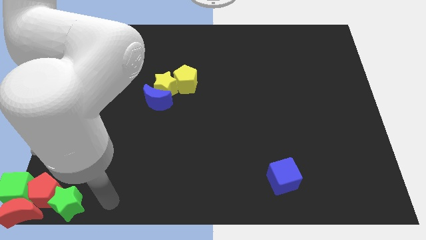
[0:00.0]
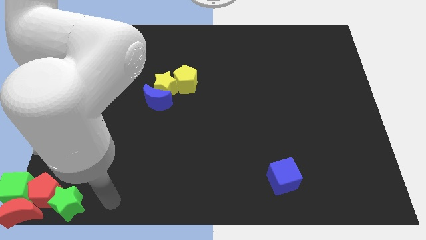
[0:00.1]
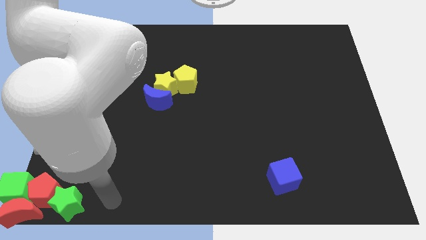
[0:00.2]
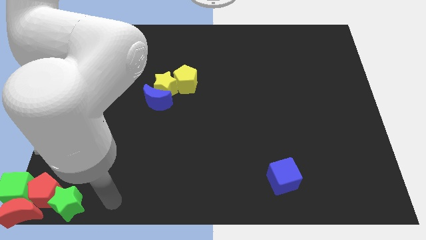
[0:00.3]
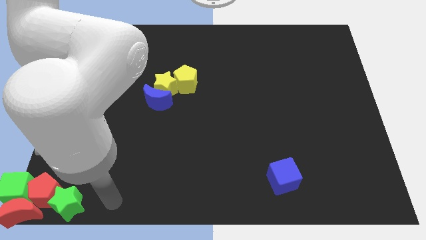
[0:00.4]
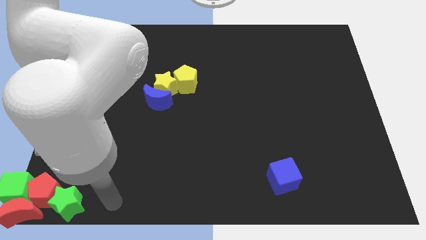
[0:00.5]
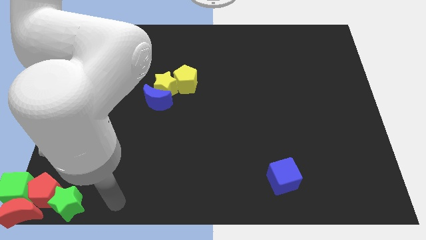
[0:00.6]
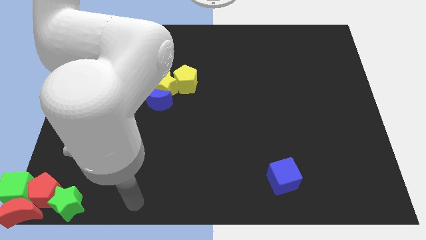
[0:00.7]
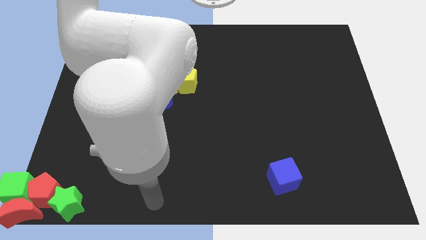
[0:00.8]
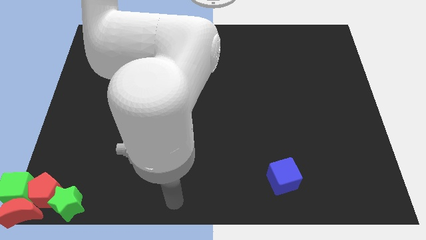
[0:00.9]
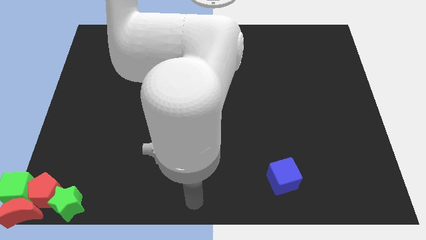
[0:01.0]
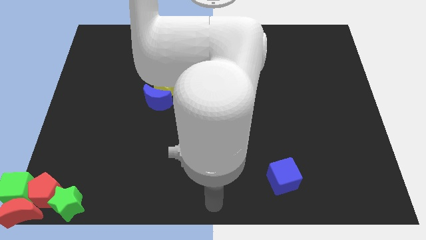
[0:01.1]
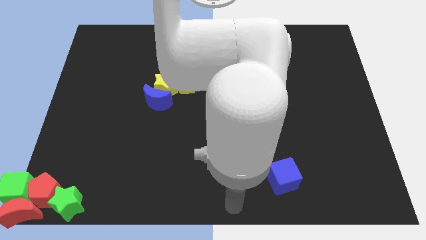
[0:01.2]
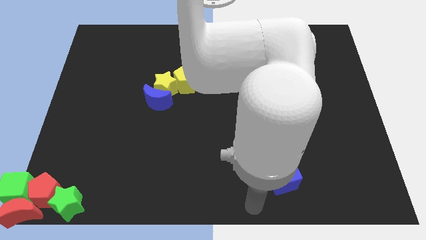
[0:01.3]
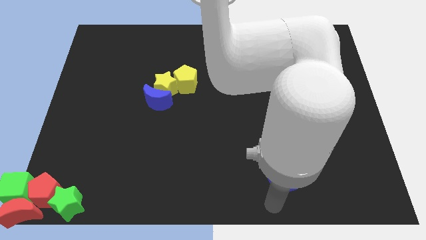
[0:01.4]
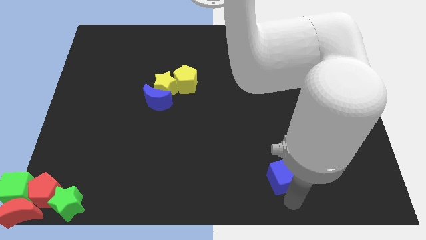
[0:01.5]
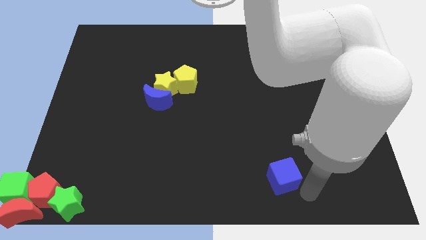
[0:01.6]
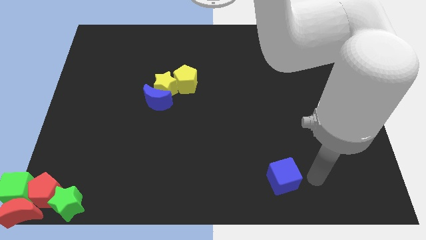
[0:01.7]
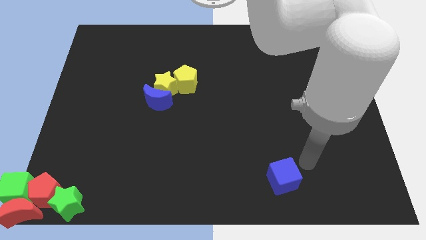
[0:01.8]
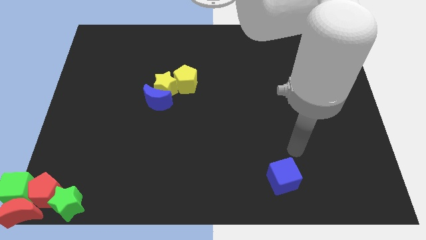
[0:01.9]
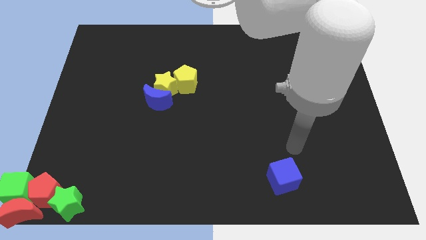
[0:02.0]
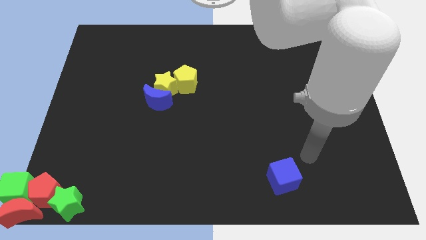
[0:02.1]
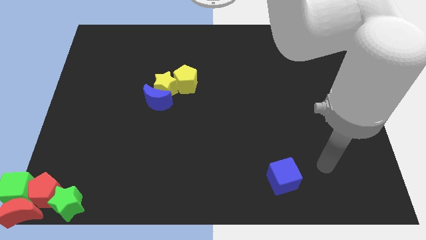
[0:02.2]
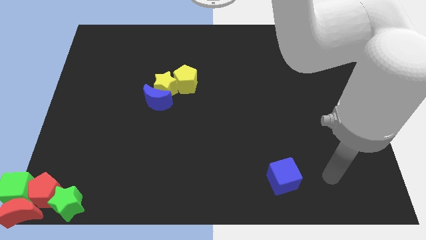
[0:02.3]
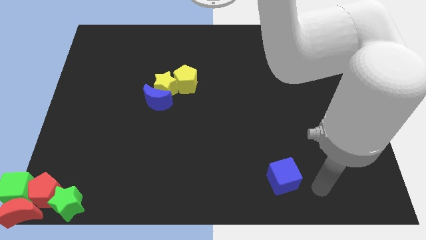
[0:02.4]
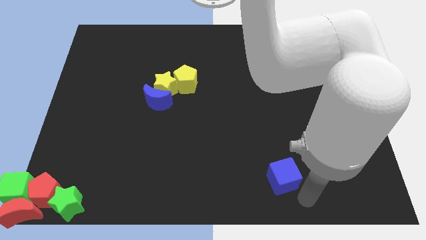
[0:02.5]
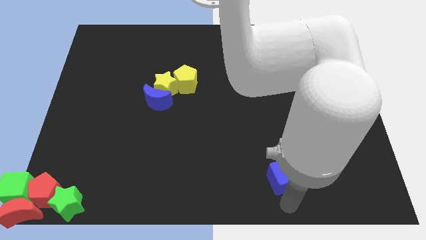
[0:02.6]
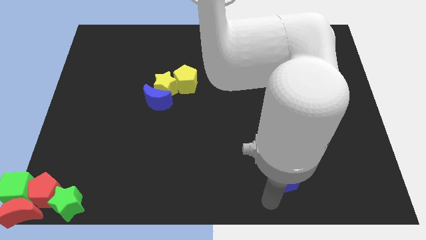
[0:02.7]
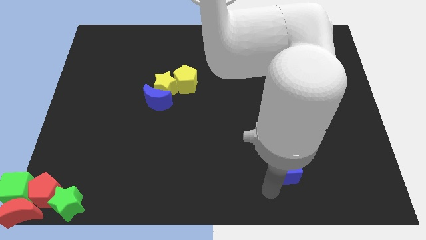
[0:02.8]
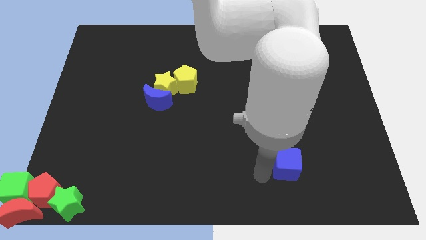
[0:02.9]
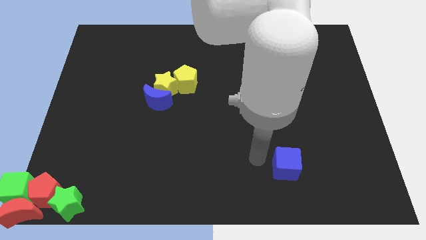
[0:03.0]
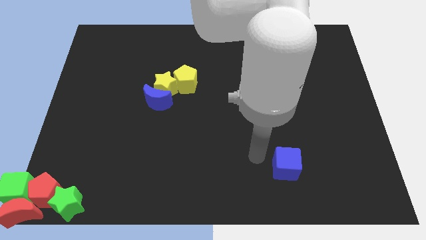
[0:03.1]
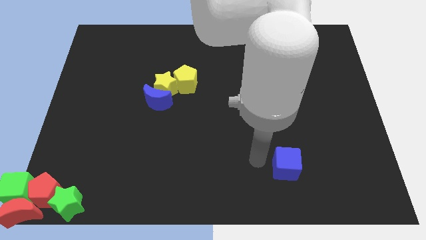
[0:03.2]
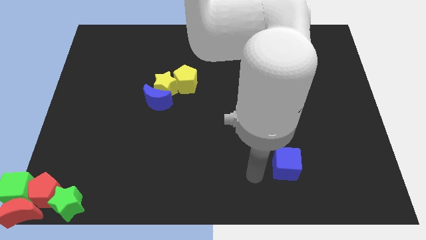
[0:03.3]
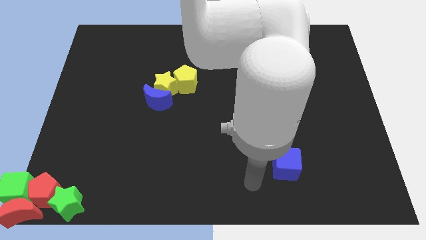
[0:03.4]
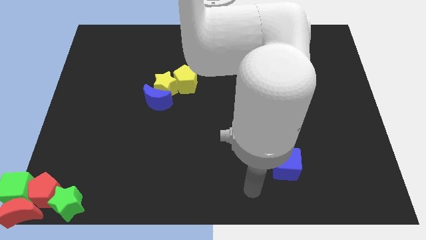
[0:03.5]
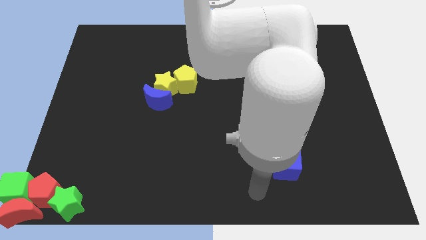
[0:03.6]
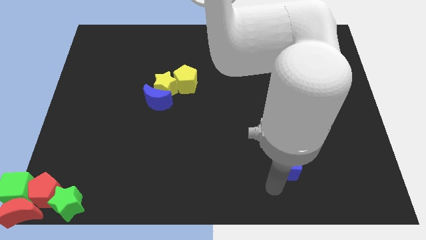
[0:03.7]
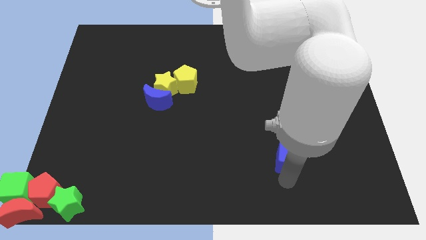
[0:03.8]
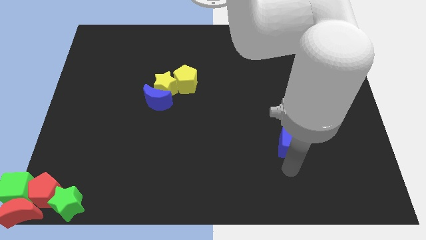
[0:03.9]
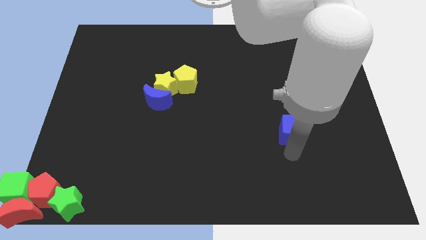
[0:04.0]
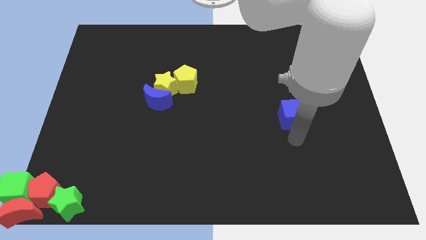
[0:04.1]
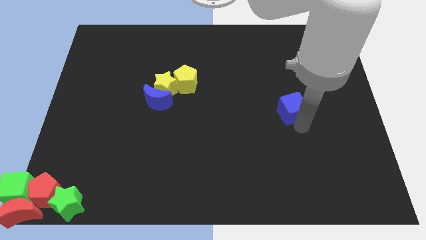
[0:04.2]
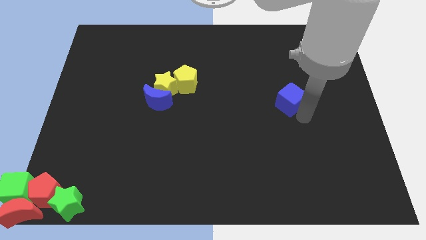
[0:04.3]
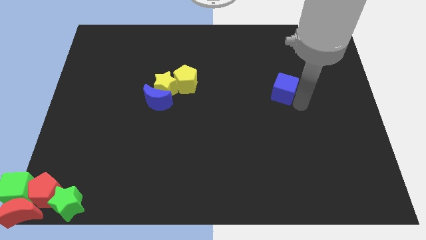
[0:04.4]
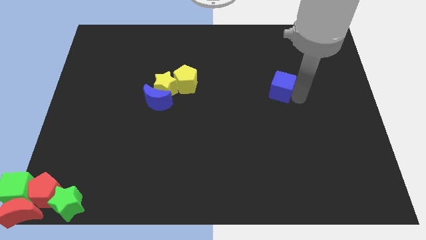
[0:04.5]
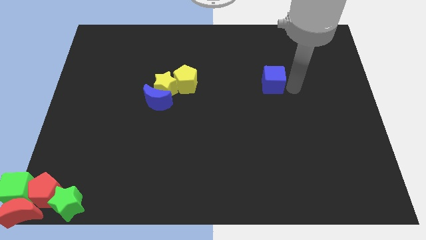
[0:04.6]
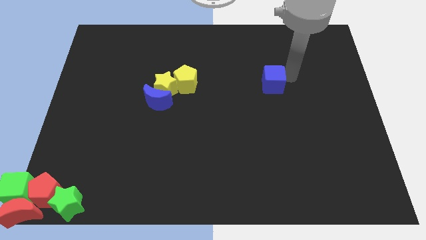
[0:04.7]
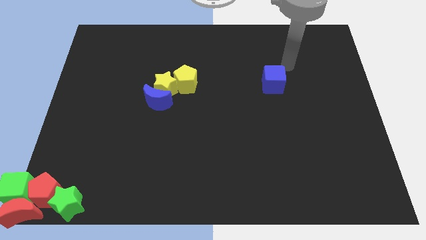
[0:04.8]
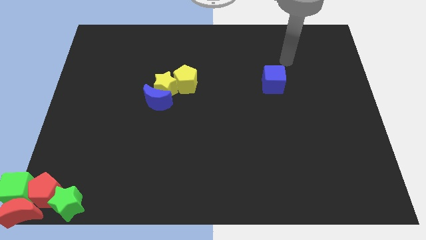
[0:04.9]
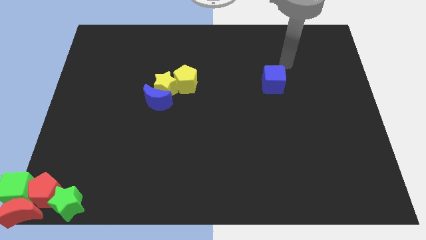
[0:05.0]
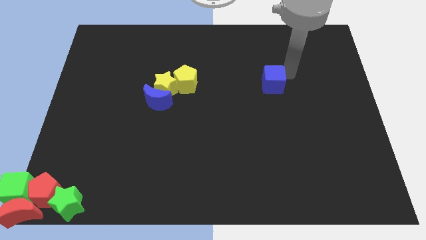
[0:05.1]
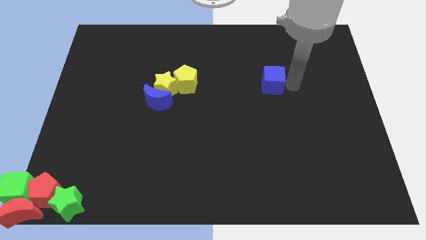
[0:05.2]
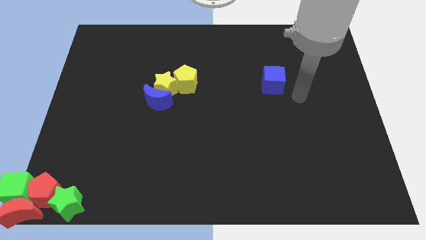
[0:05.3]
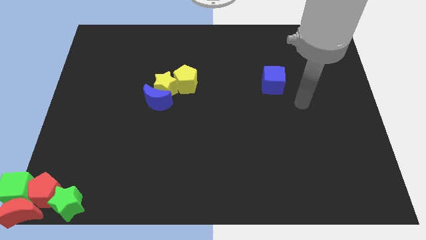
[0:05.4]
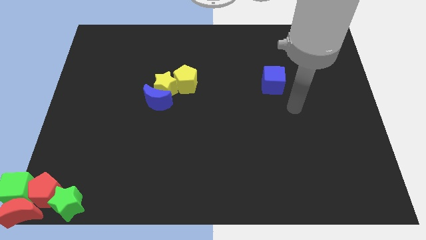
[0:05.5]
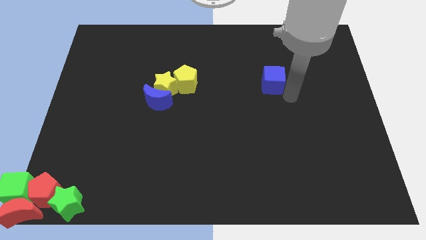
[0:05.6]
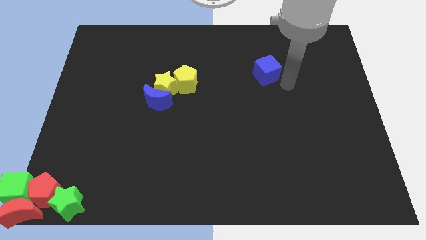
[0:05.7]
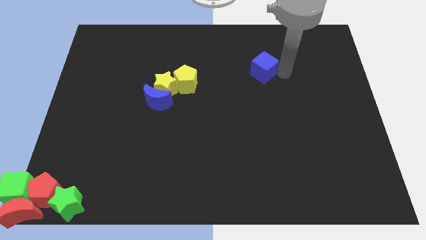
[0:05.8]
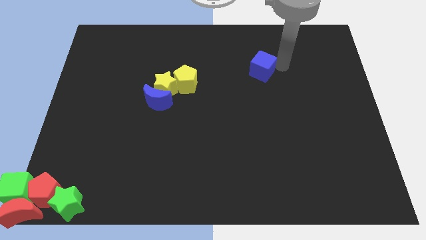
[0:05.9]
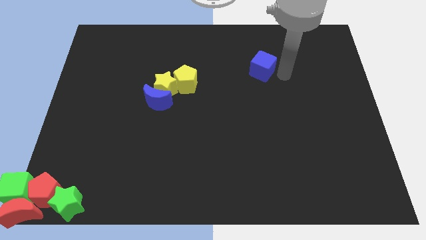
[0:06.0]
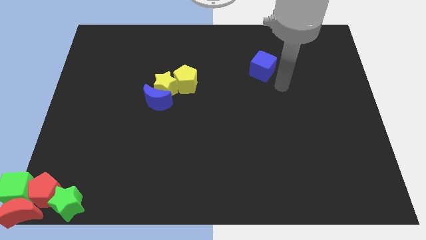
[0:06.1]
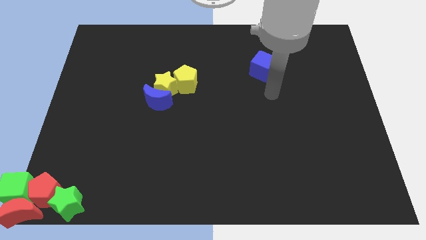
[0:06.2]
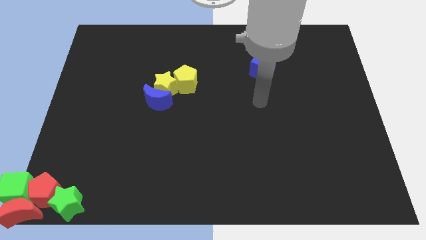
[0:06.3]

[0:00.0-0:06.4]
move blue cube towards the top center

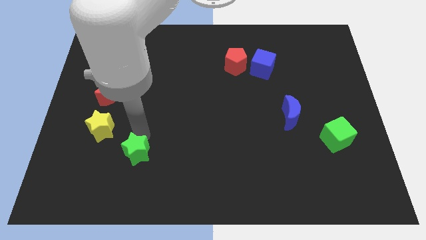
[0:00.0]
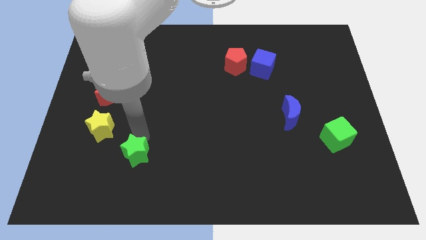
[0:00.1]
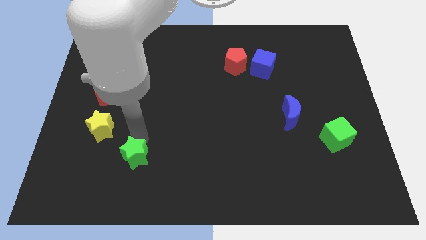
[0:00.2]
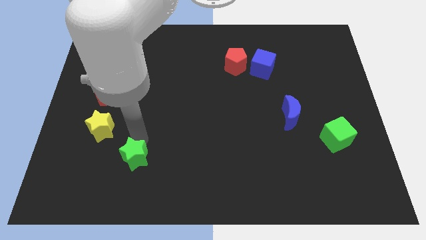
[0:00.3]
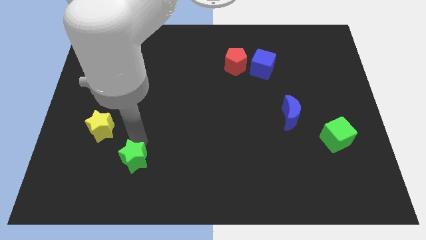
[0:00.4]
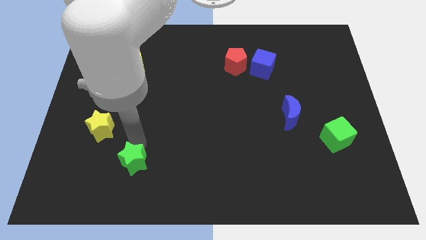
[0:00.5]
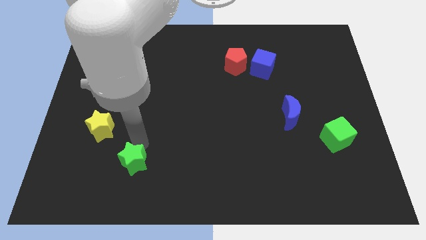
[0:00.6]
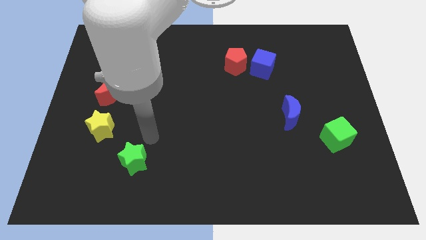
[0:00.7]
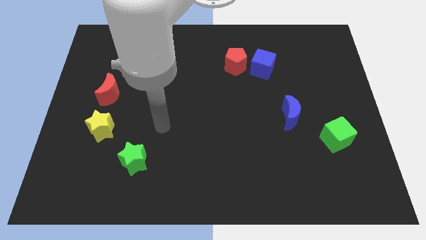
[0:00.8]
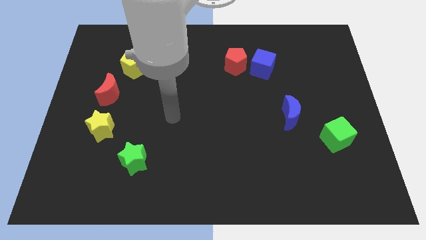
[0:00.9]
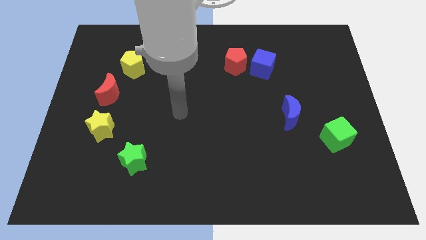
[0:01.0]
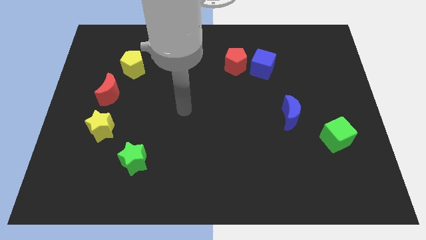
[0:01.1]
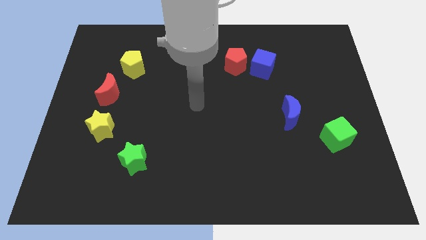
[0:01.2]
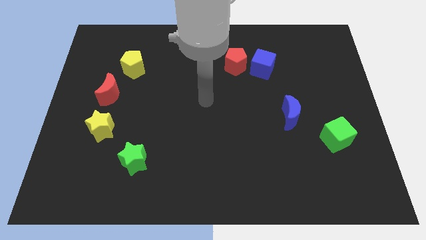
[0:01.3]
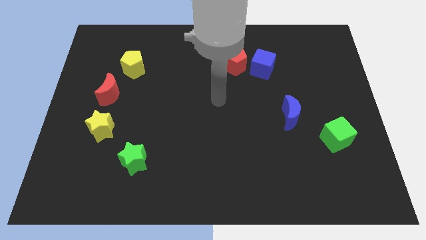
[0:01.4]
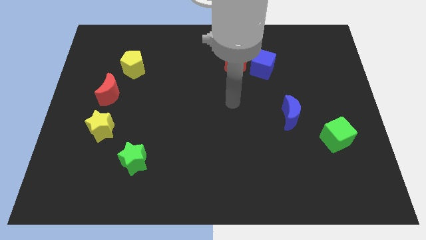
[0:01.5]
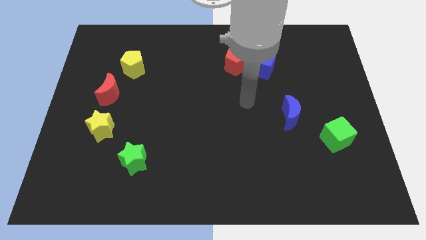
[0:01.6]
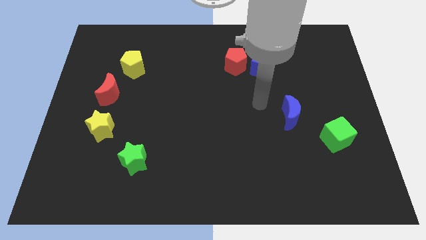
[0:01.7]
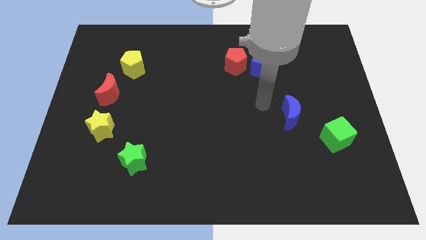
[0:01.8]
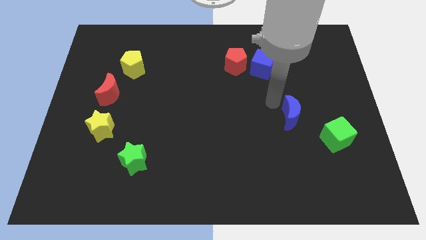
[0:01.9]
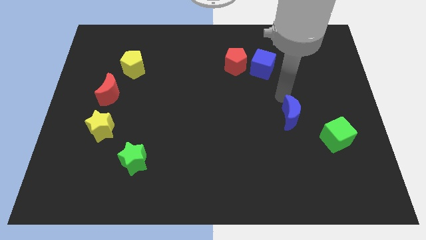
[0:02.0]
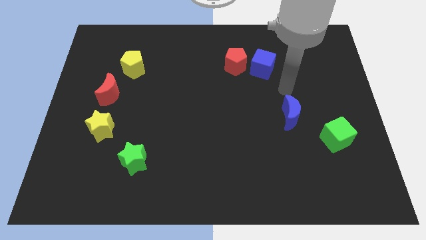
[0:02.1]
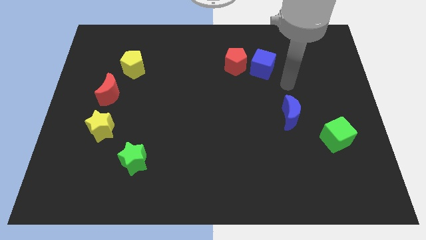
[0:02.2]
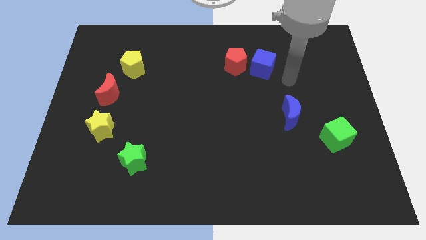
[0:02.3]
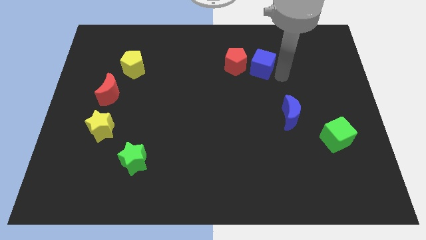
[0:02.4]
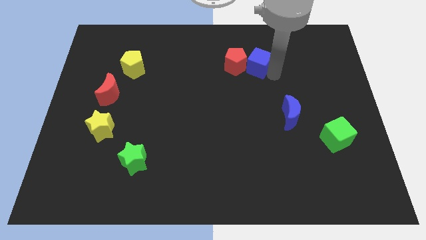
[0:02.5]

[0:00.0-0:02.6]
move your arm away from green star
